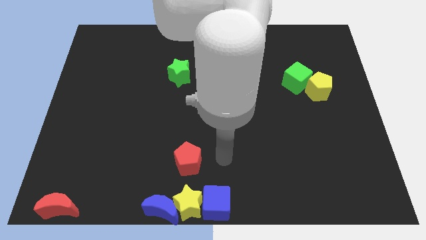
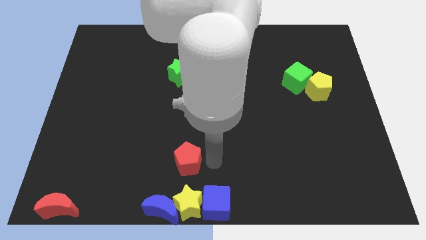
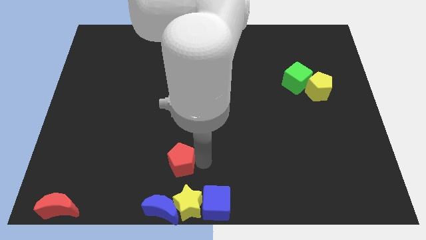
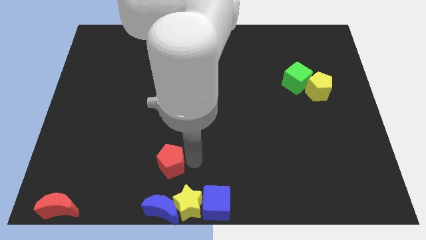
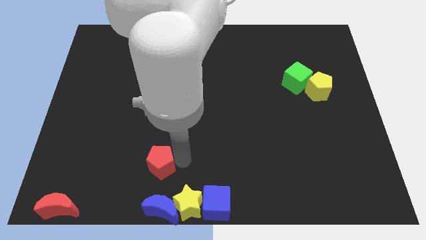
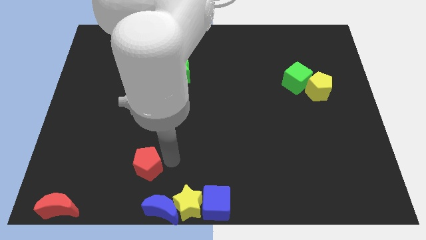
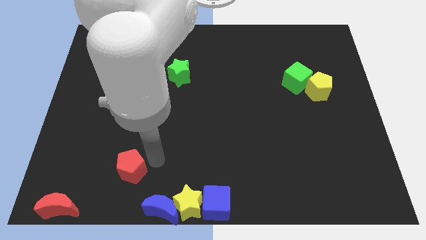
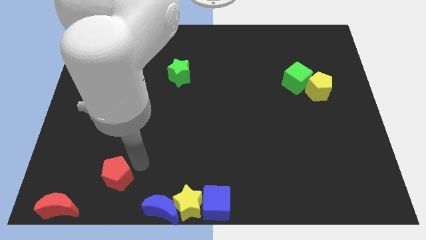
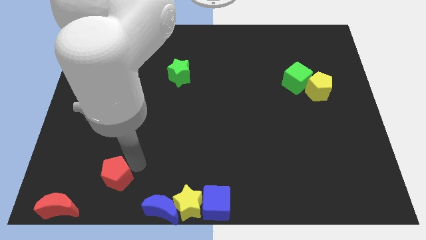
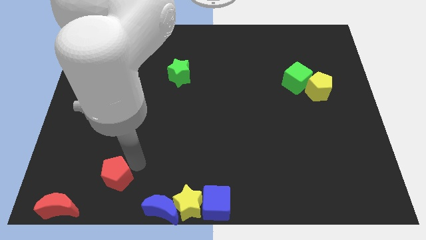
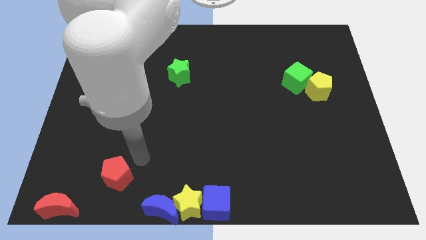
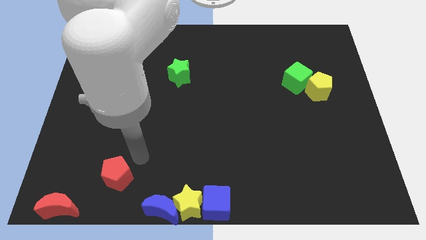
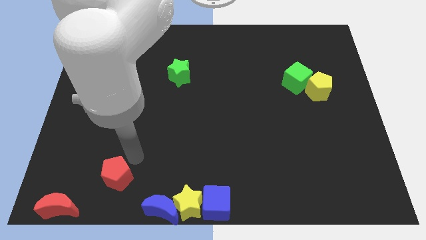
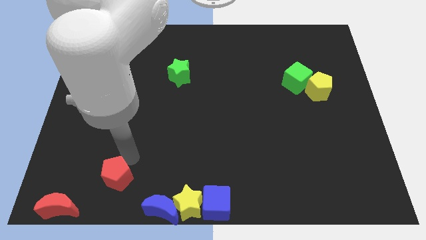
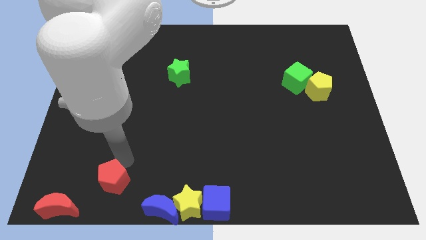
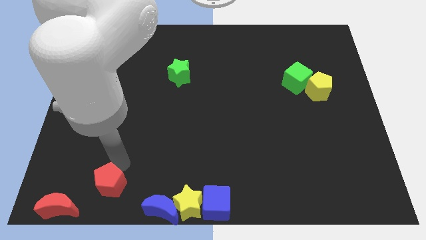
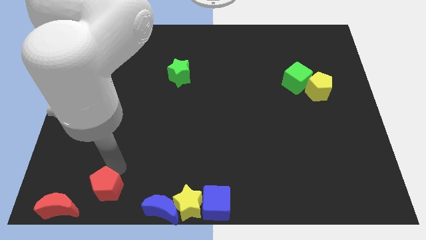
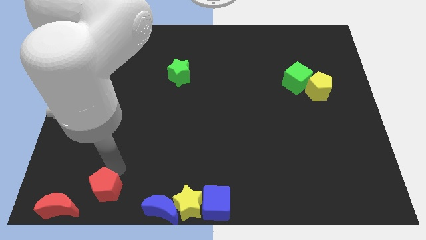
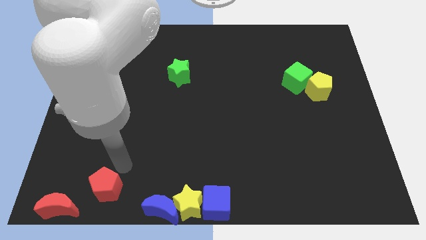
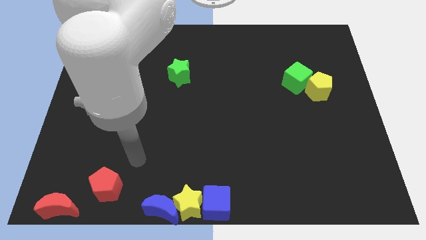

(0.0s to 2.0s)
slide the red pentagon towards the red moon

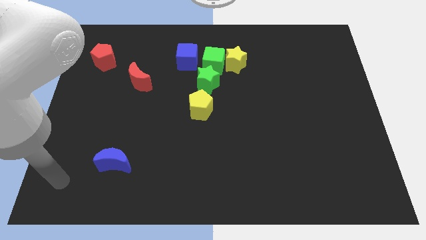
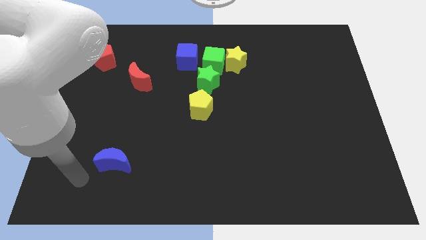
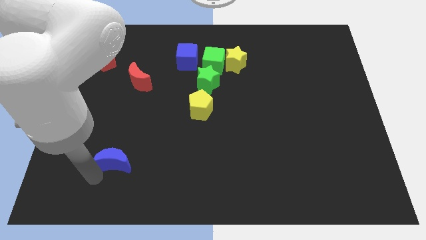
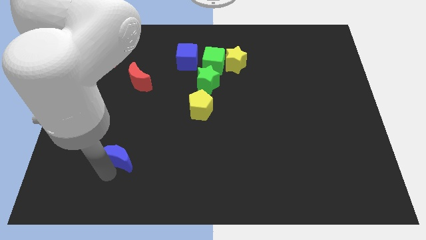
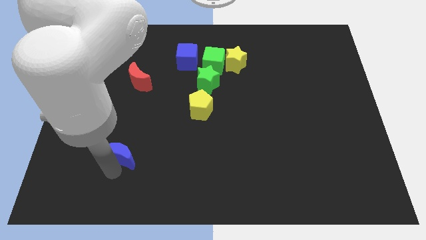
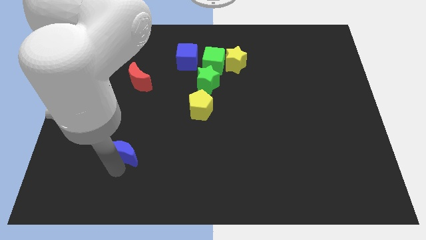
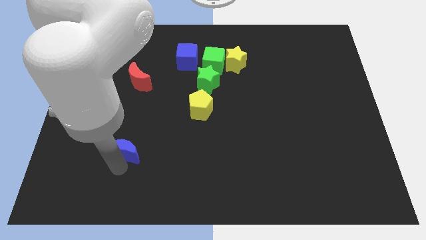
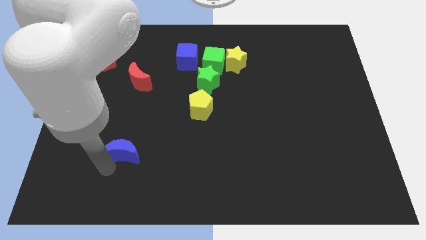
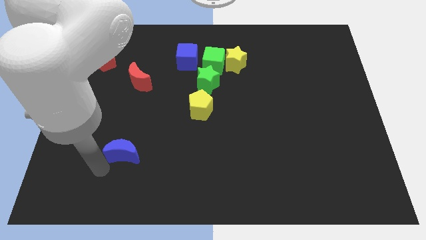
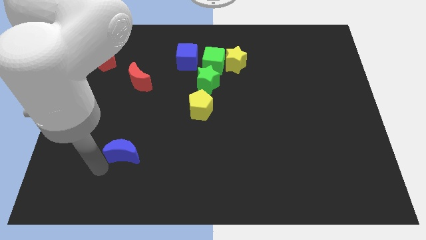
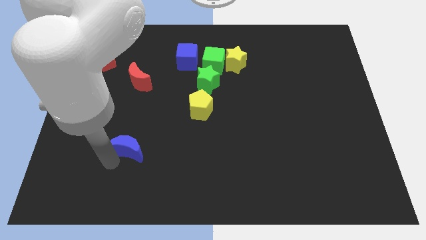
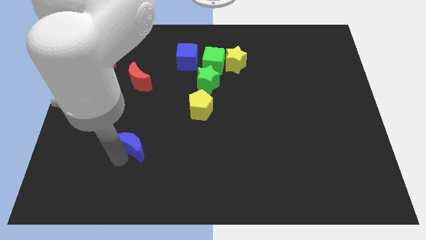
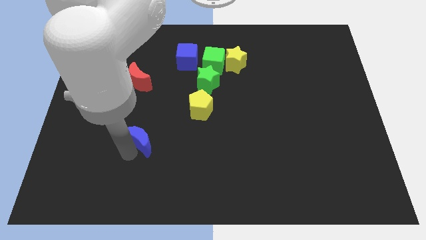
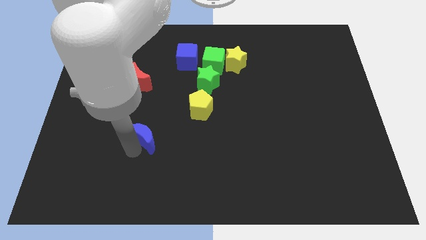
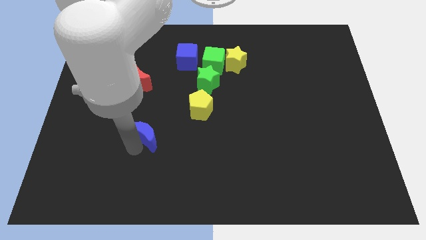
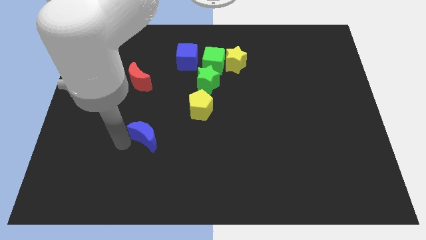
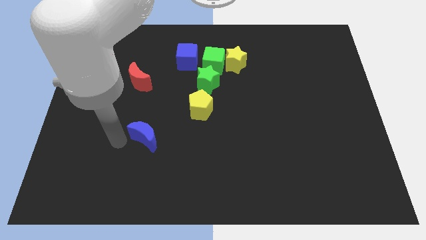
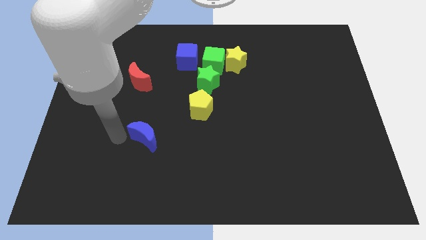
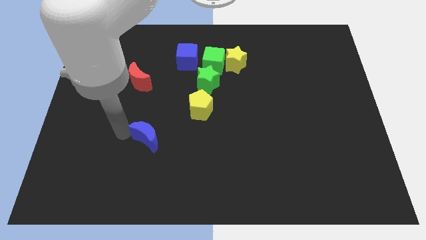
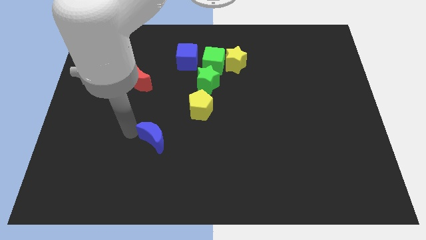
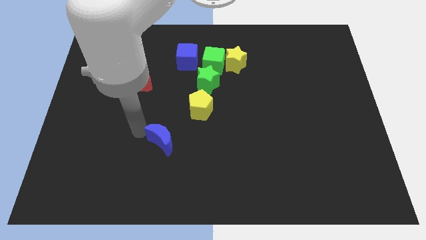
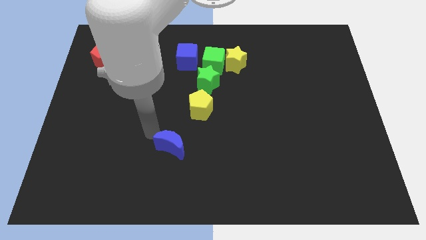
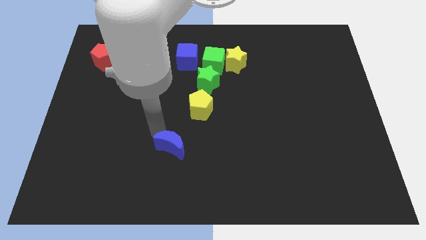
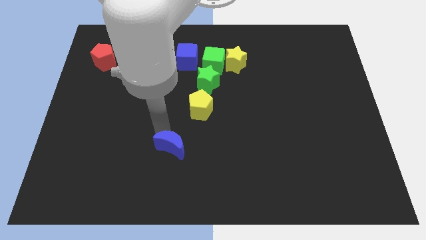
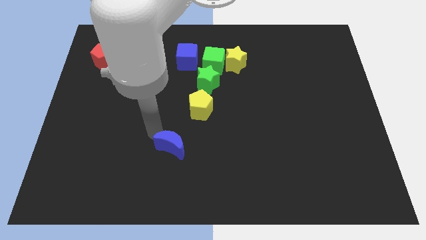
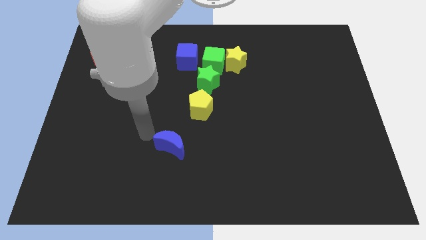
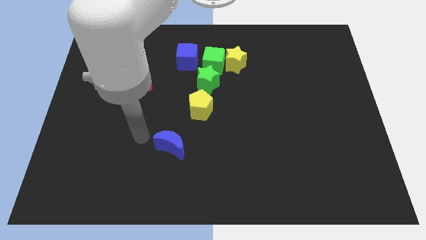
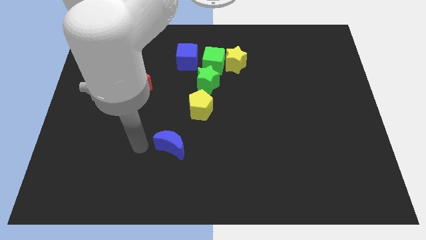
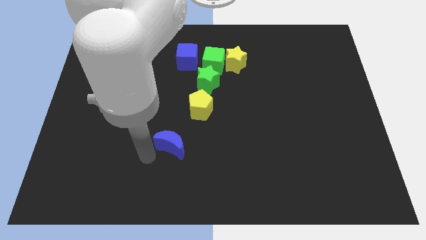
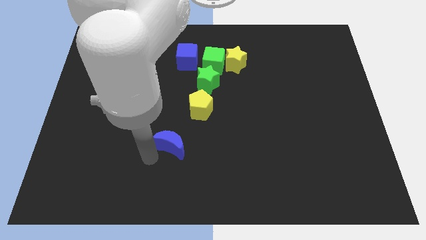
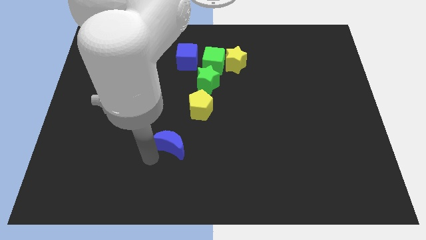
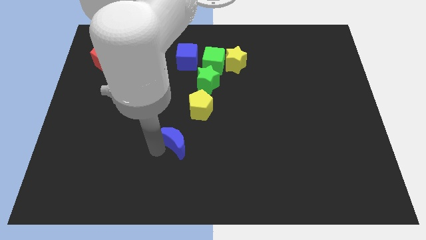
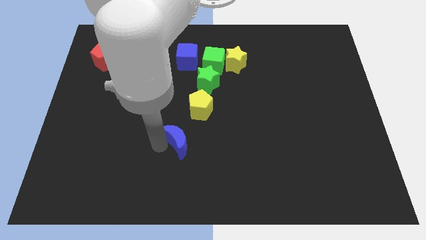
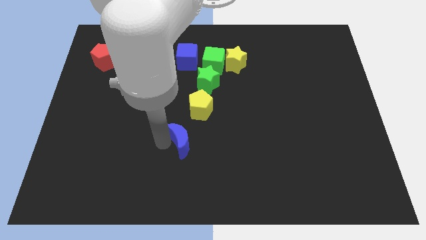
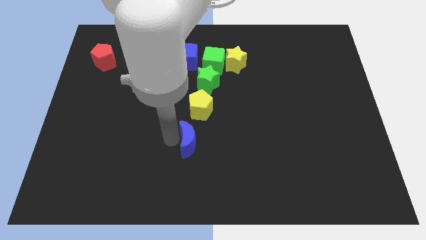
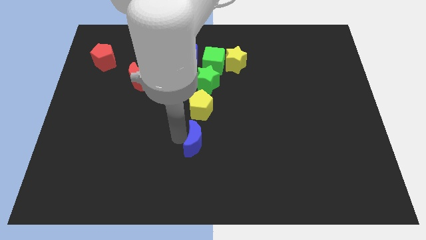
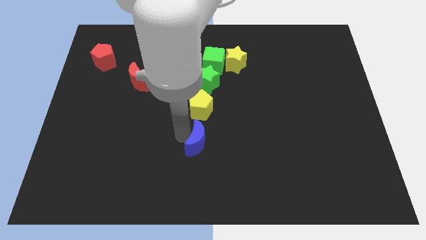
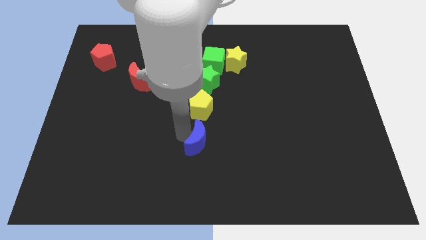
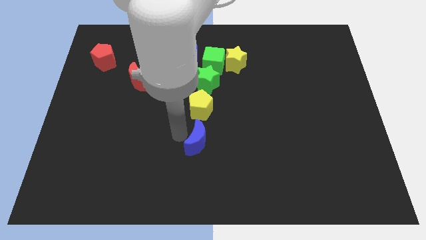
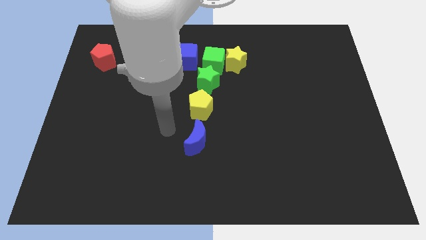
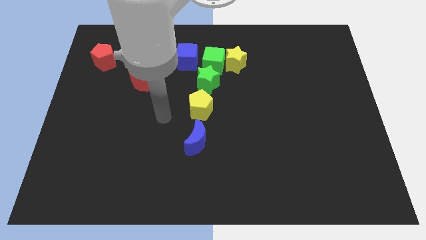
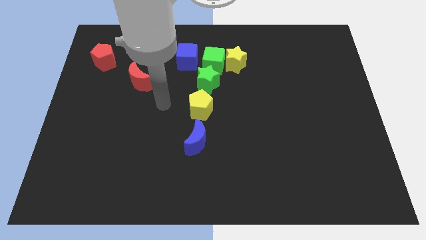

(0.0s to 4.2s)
move the blue crescent towards the bottom of the yellow pentagon

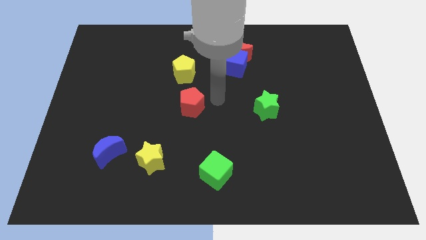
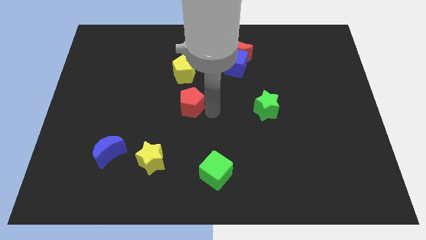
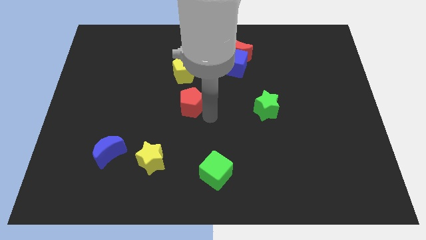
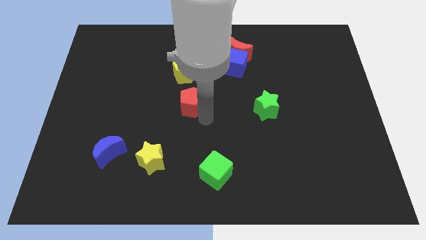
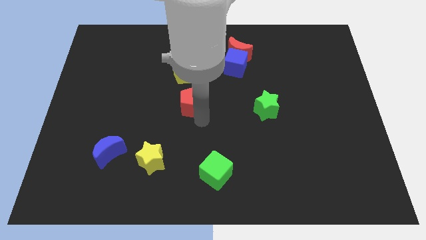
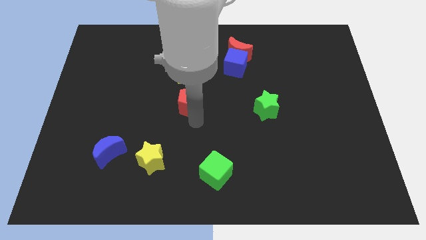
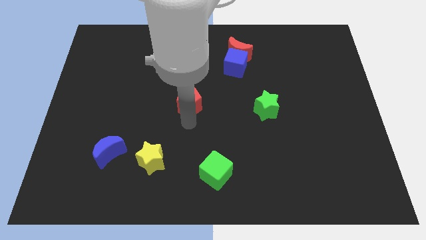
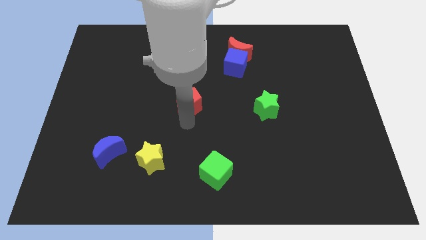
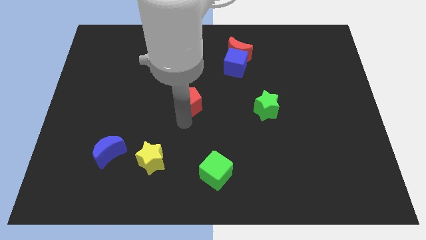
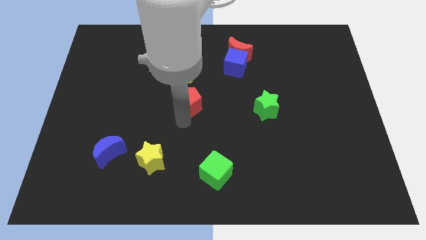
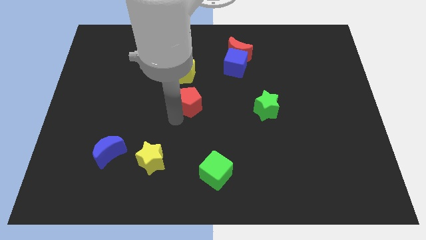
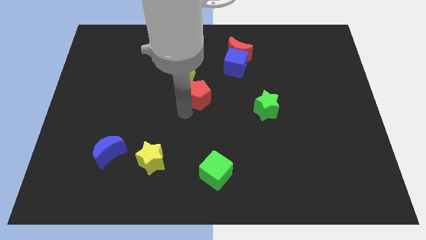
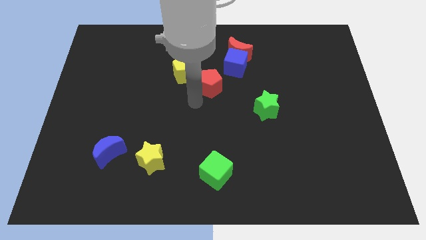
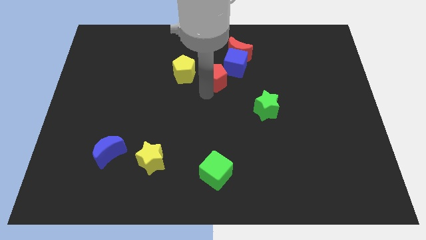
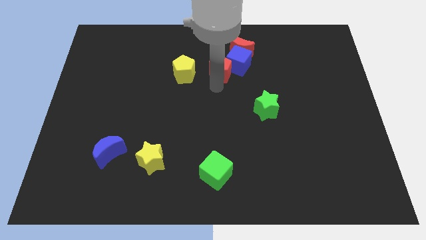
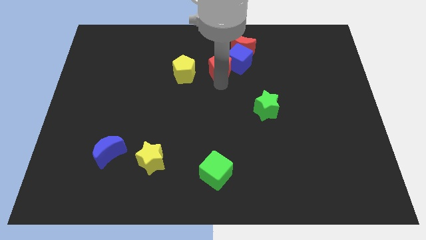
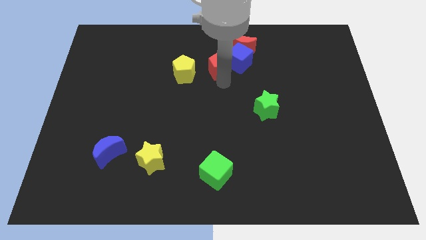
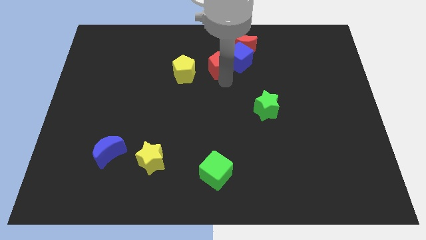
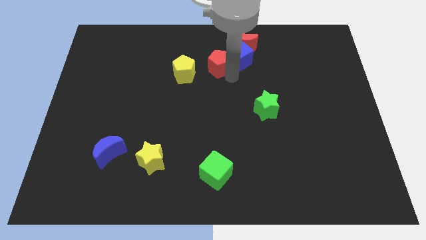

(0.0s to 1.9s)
move the red pentagon to the bottom left side of the blue cube

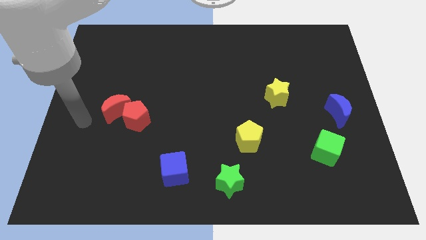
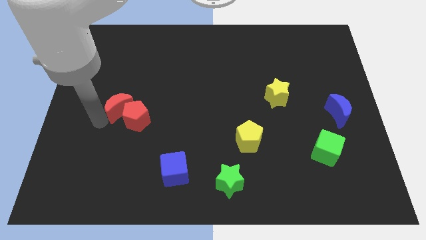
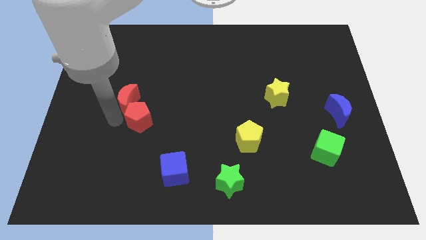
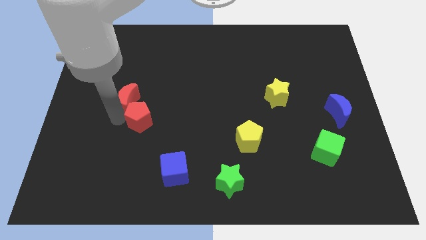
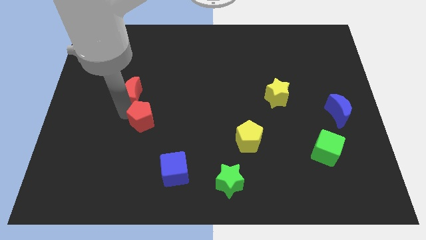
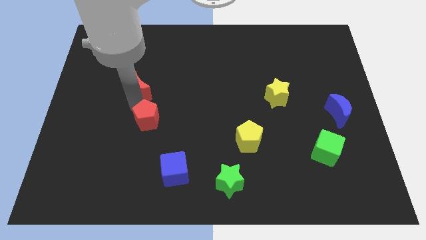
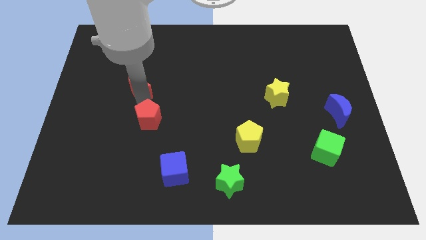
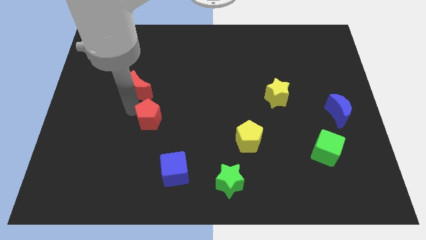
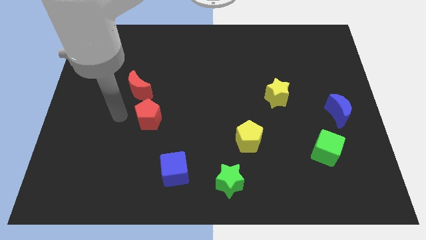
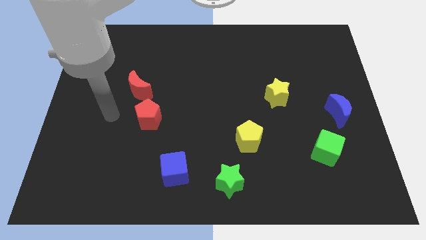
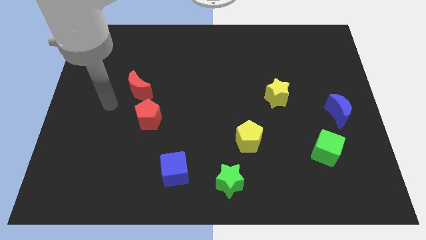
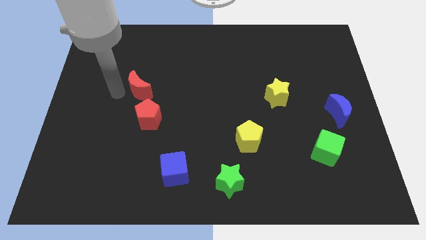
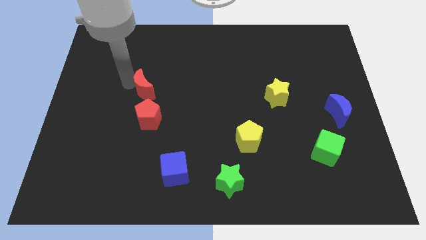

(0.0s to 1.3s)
push red crescent and red pentagon to the right
